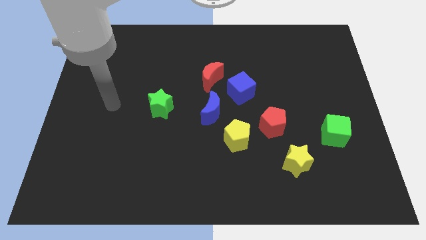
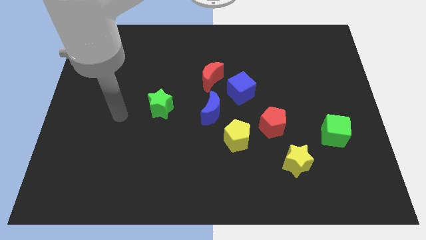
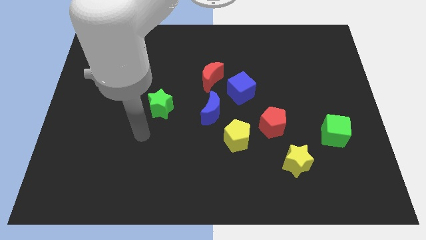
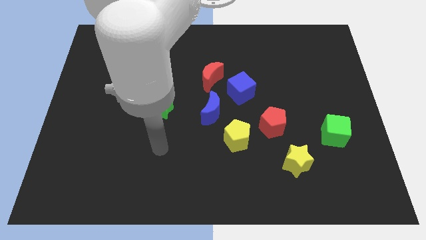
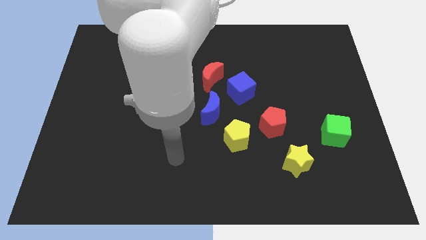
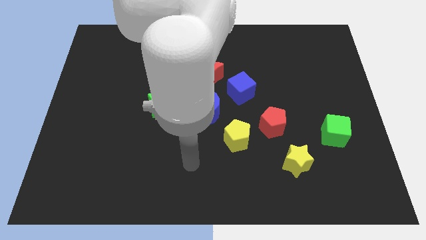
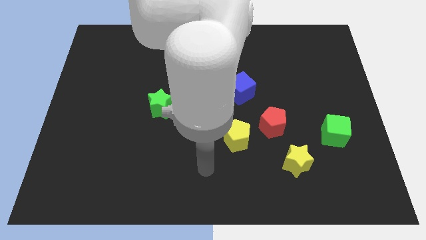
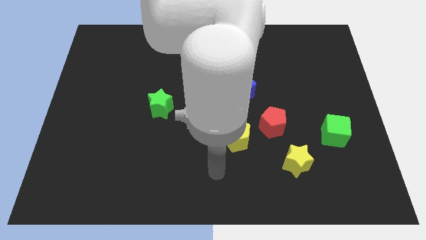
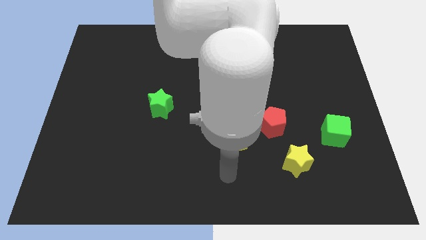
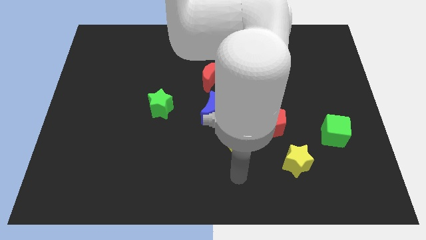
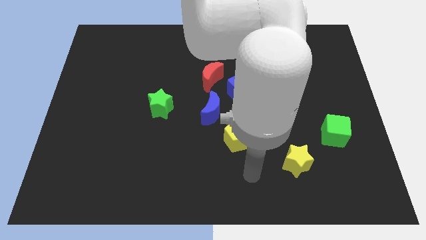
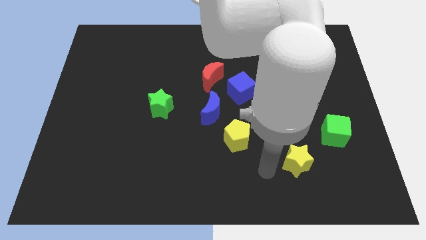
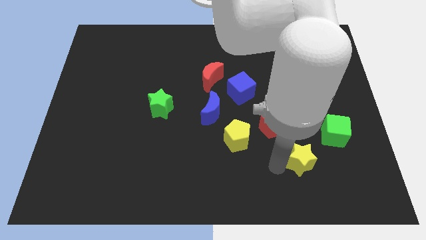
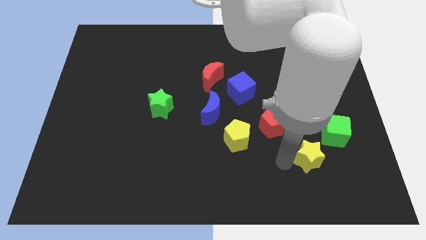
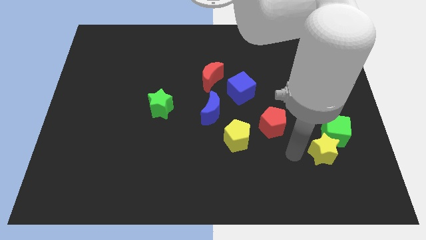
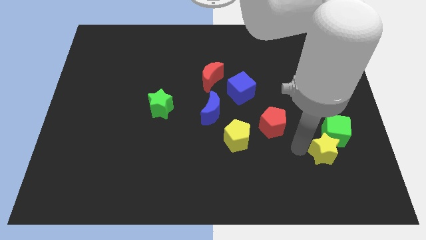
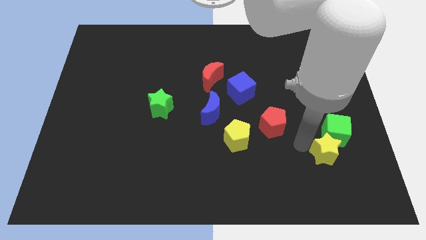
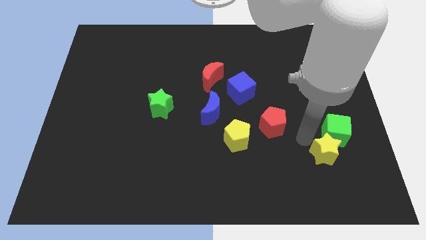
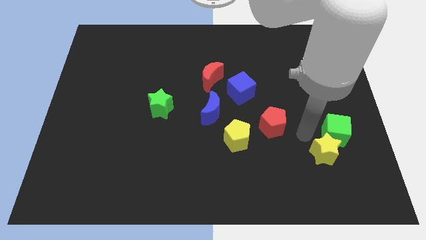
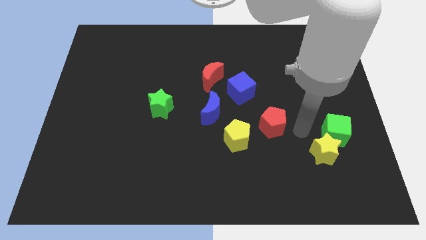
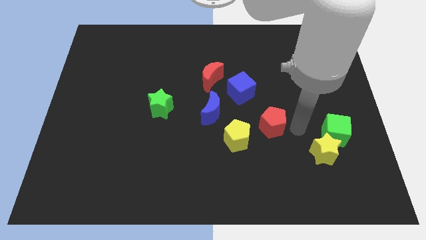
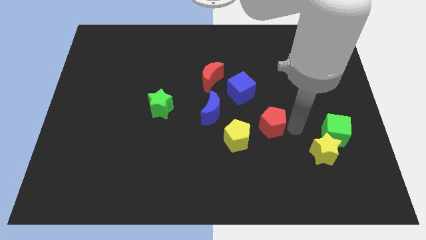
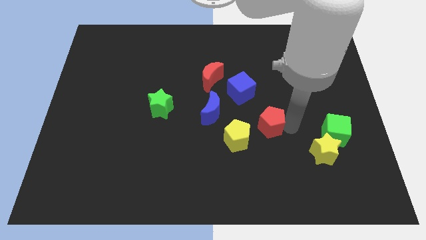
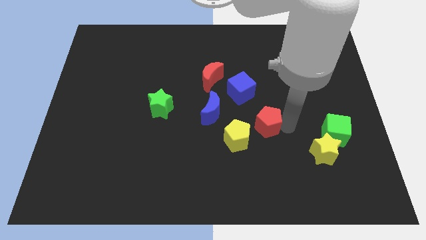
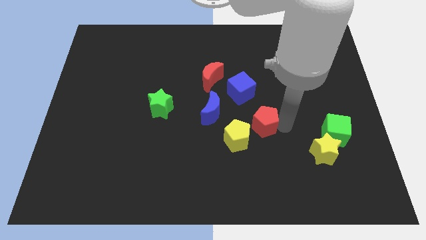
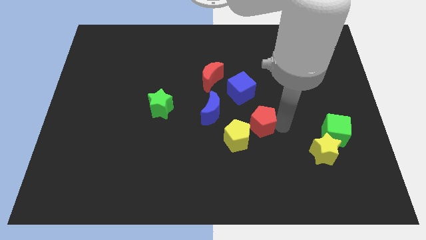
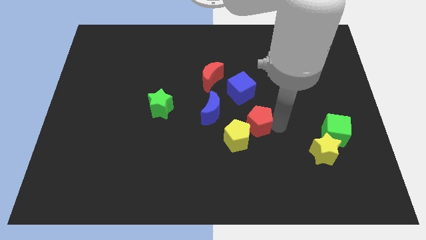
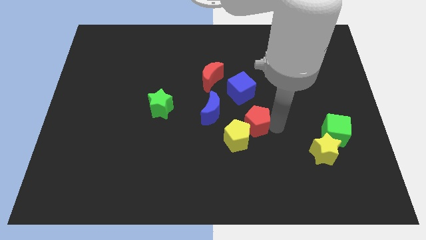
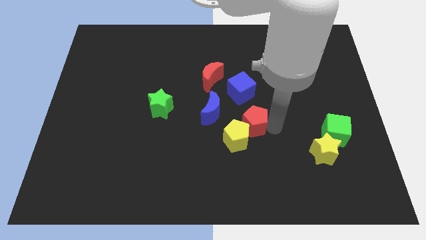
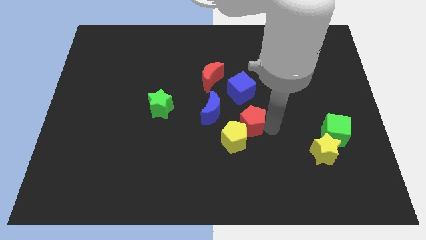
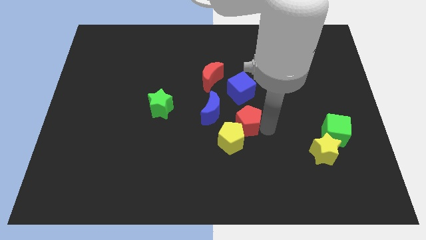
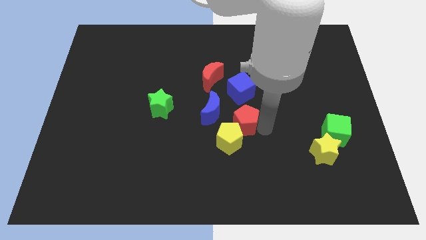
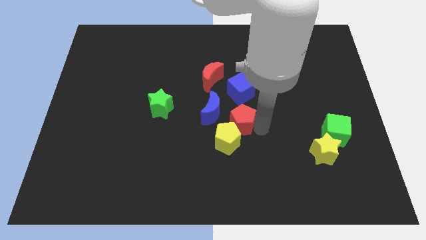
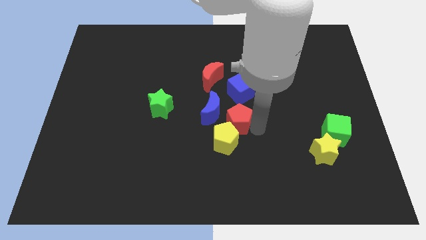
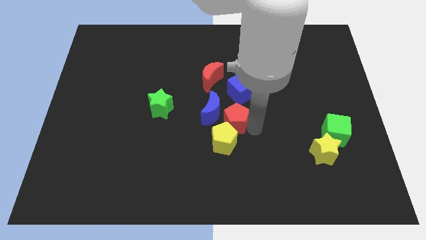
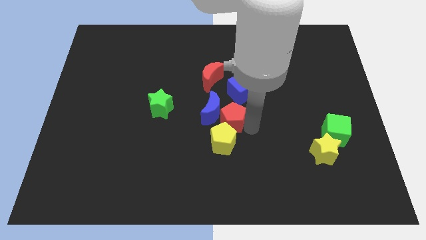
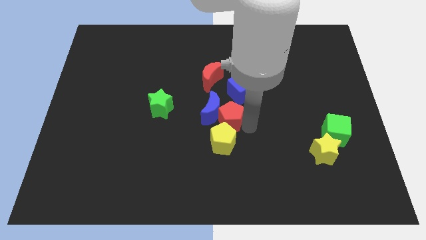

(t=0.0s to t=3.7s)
move the red pentagon towards the blue moon

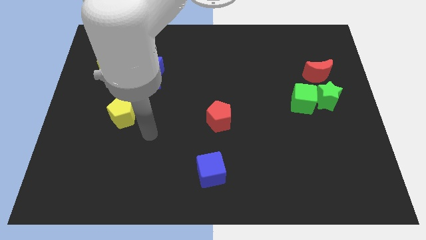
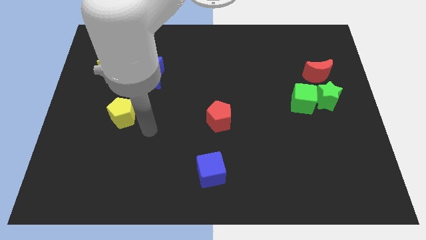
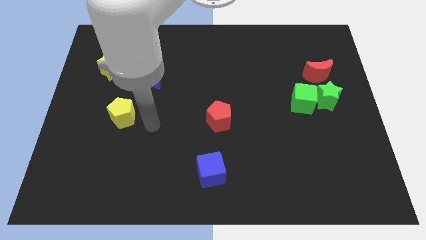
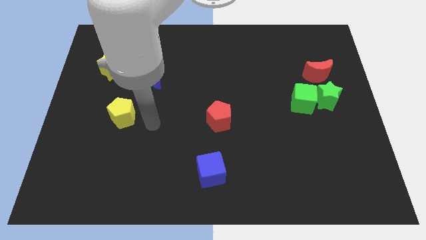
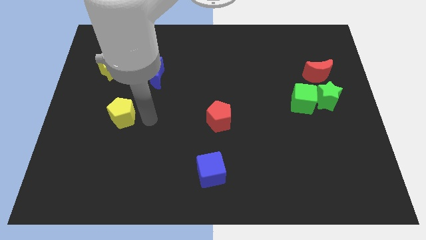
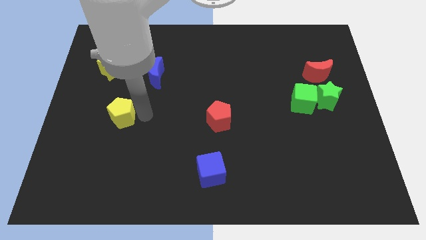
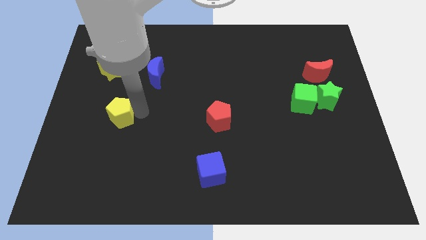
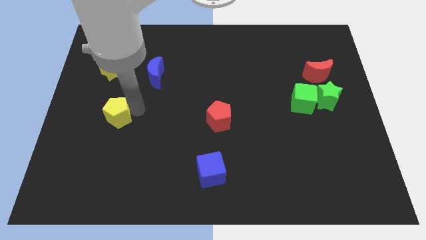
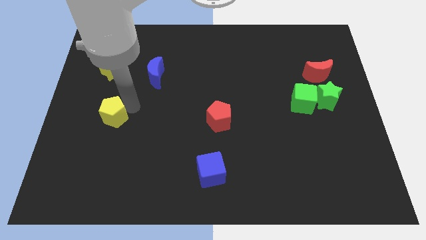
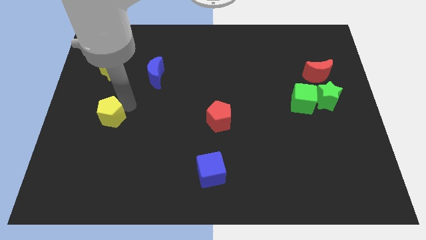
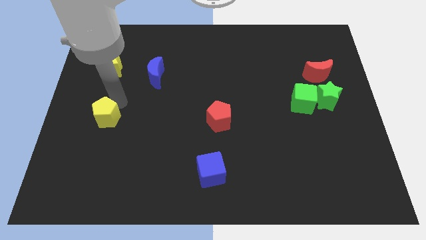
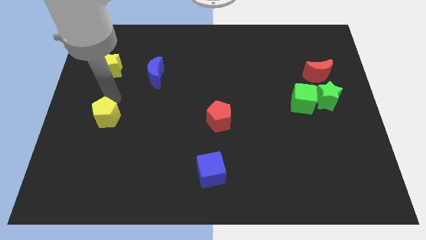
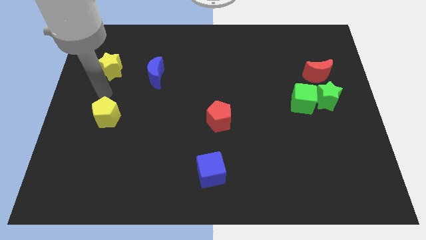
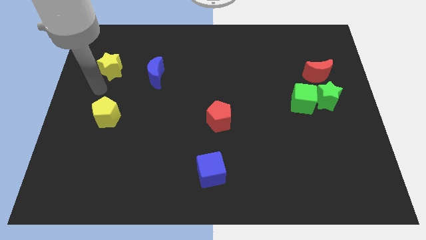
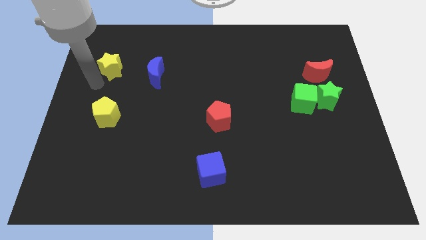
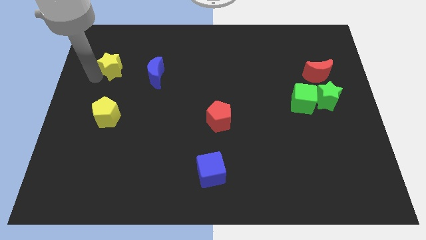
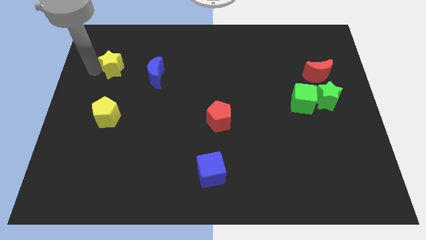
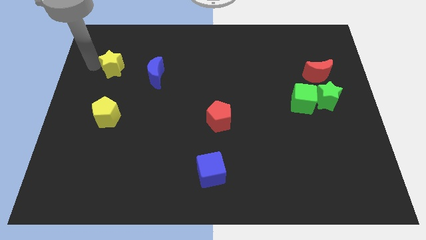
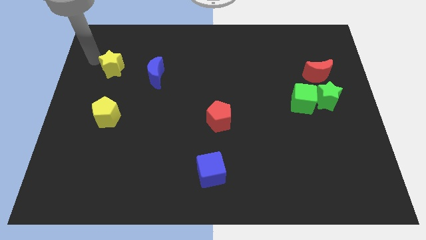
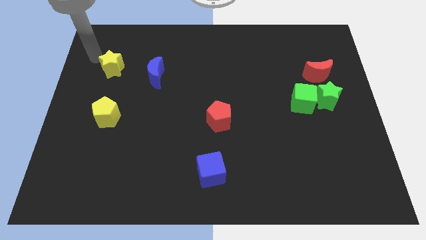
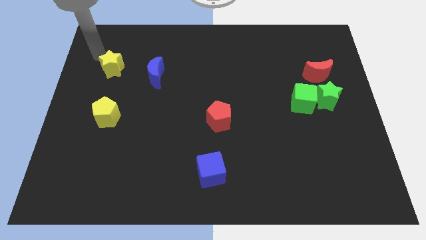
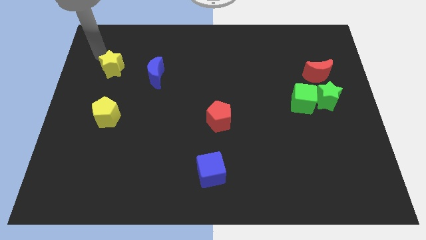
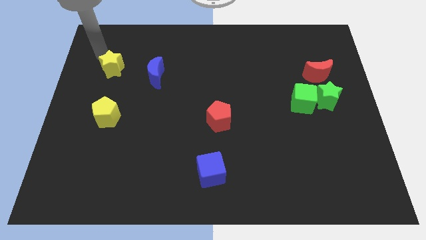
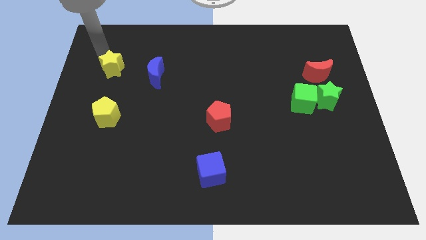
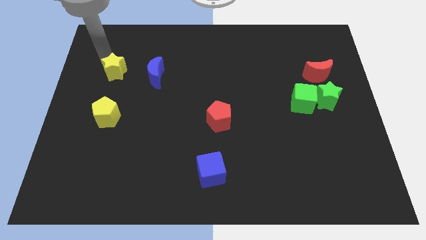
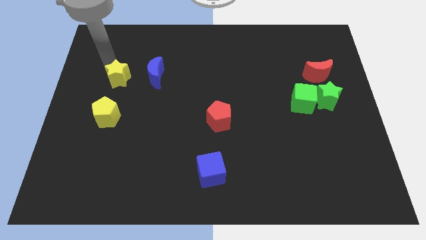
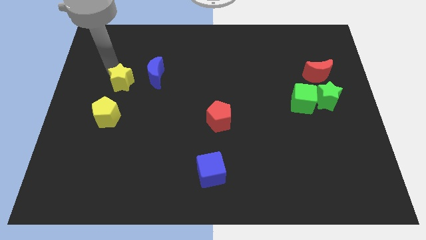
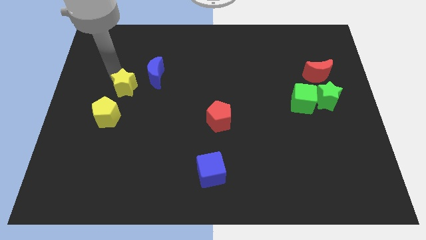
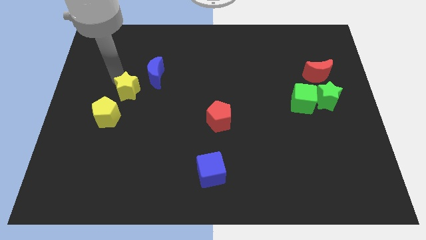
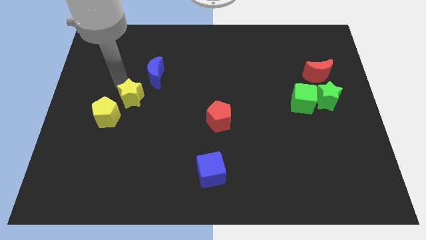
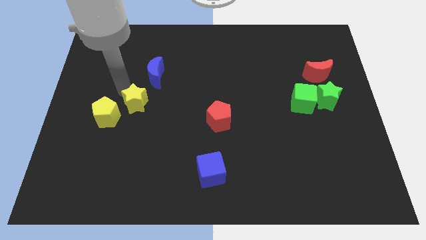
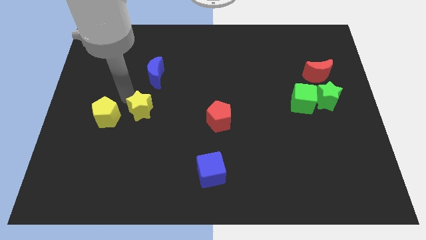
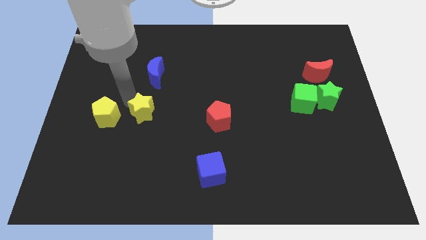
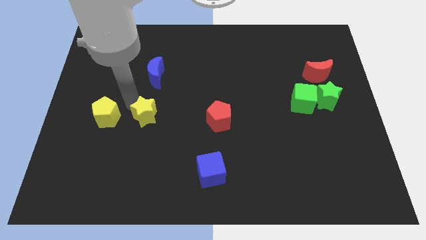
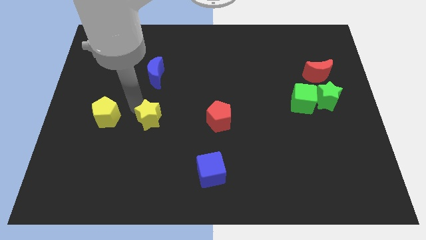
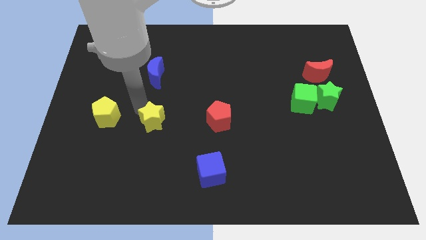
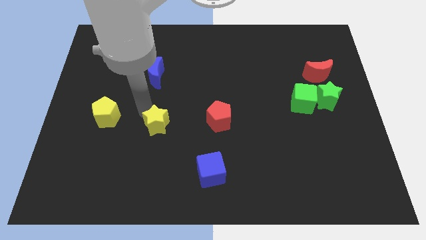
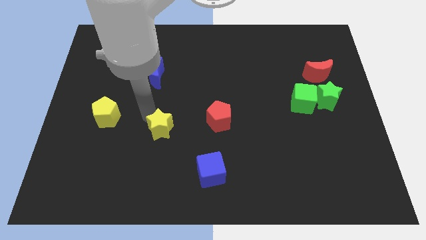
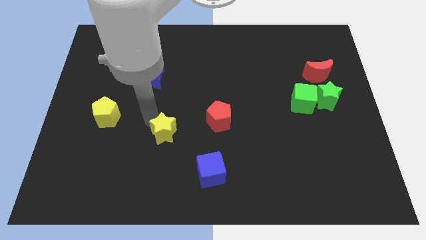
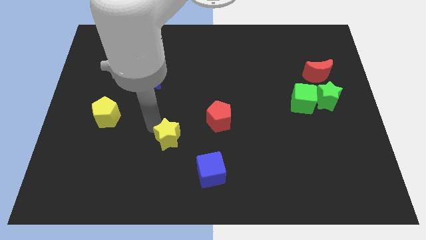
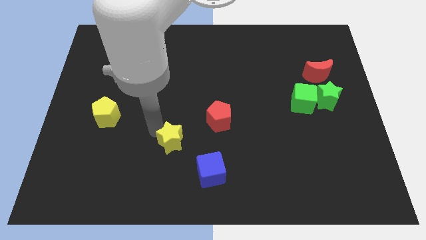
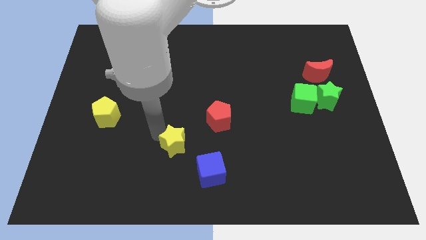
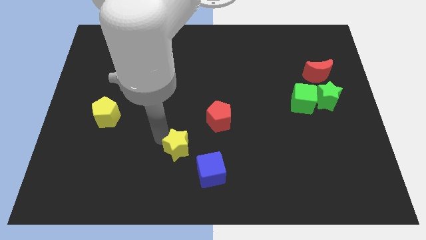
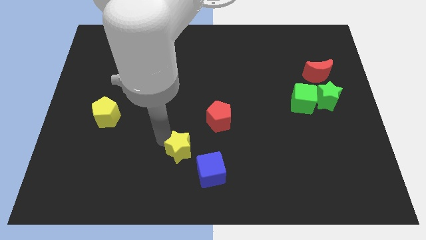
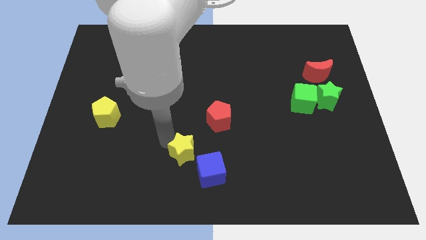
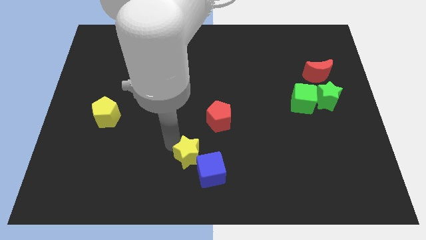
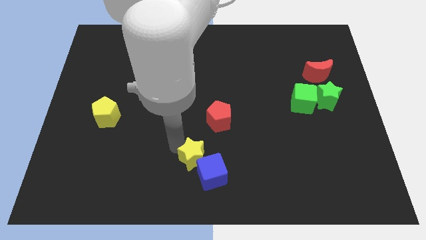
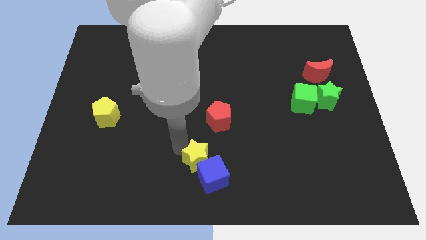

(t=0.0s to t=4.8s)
put the yellow star next to the blue cube

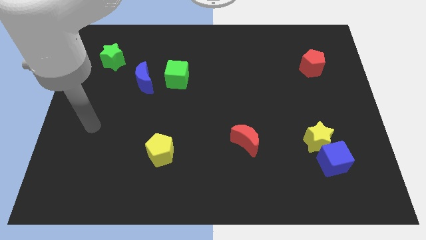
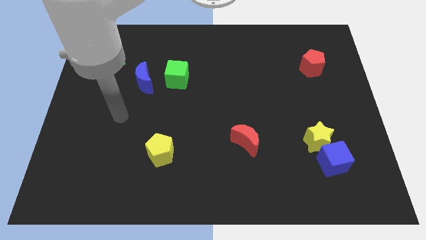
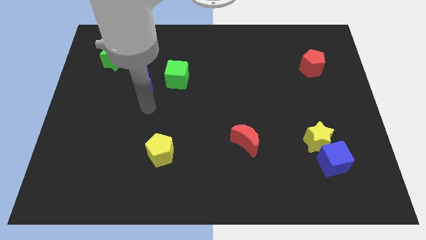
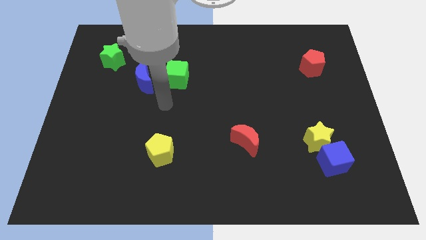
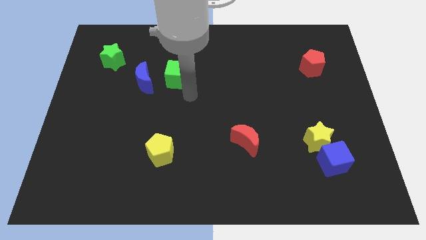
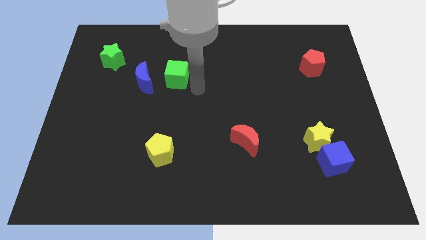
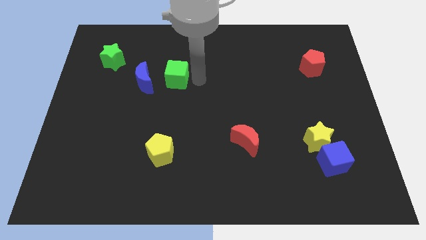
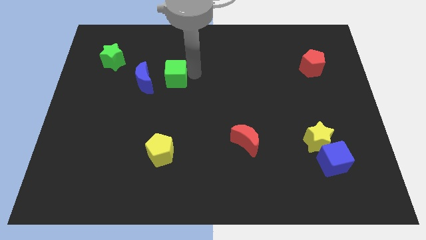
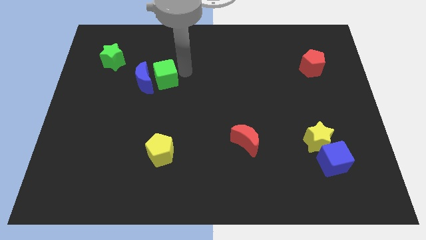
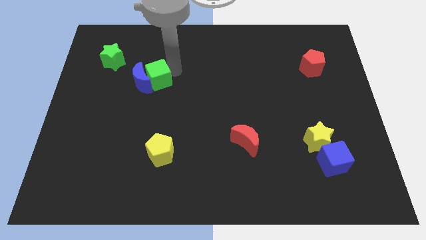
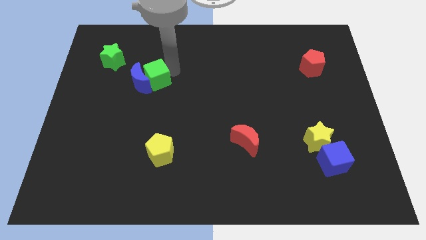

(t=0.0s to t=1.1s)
push the green cube close to the blue moon
